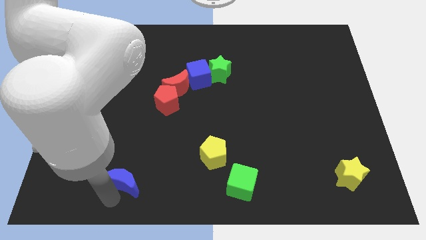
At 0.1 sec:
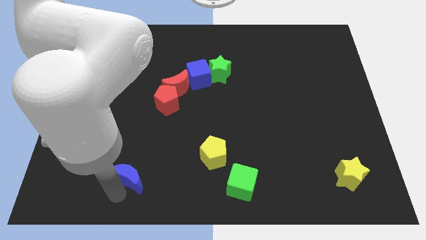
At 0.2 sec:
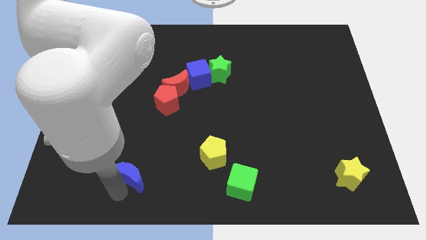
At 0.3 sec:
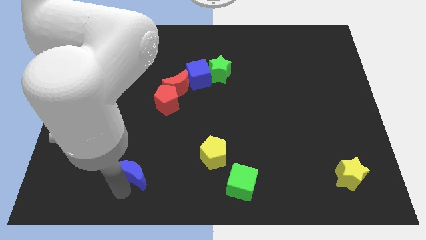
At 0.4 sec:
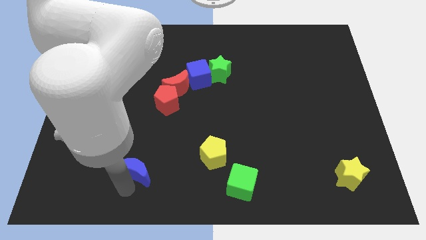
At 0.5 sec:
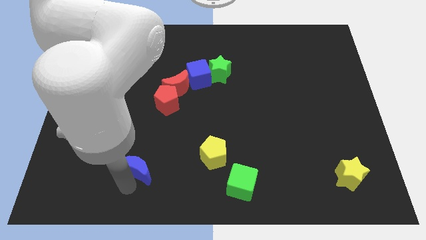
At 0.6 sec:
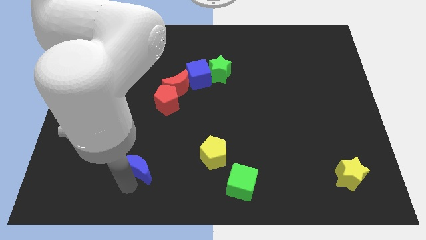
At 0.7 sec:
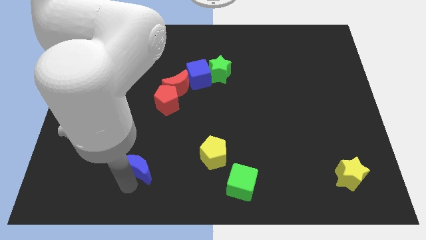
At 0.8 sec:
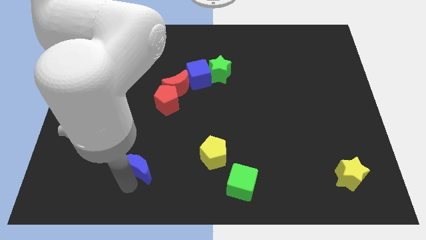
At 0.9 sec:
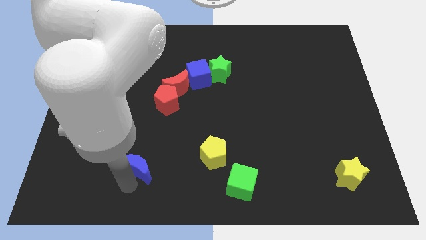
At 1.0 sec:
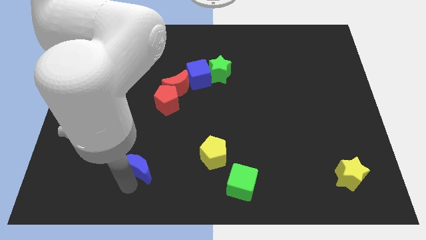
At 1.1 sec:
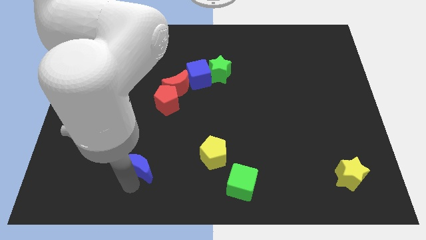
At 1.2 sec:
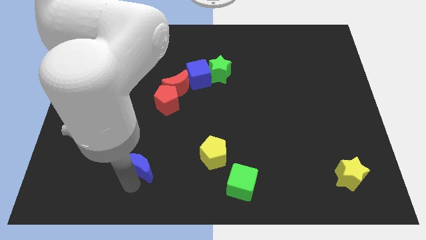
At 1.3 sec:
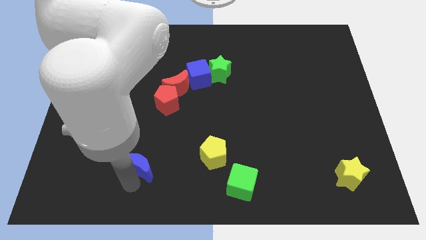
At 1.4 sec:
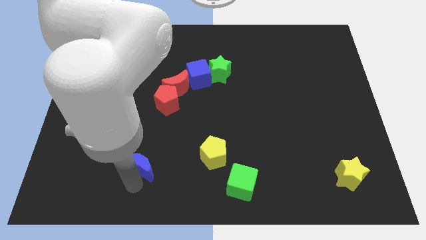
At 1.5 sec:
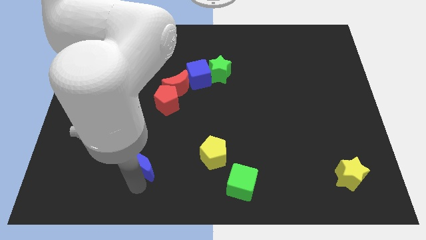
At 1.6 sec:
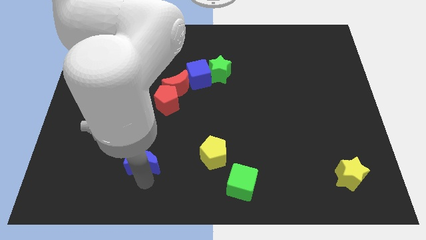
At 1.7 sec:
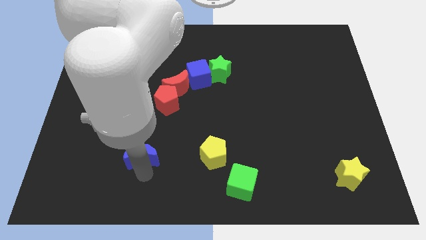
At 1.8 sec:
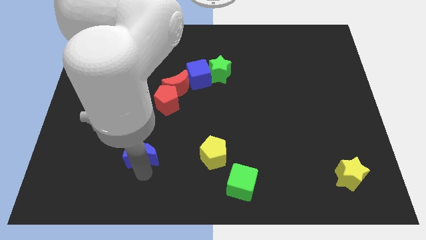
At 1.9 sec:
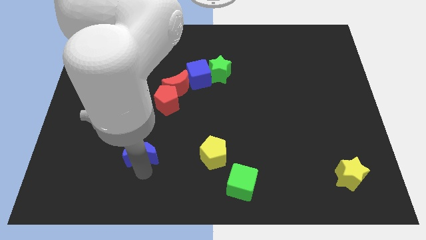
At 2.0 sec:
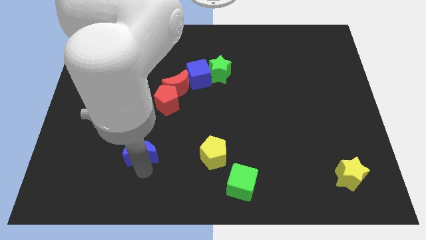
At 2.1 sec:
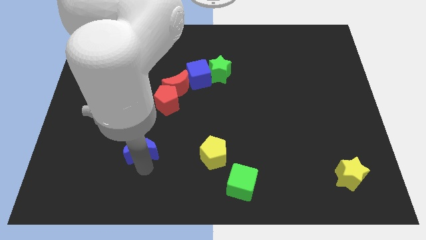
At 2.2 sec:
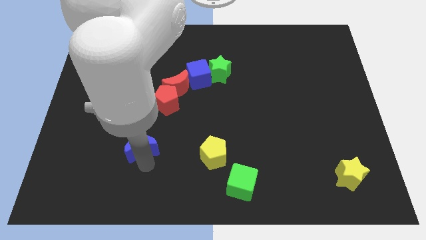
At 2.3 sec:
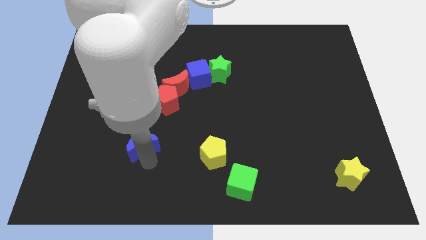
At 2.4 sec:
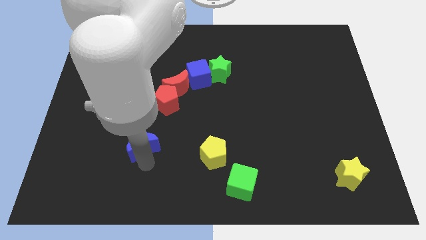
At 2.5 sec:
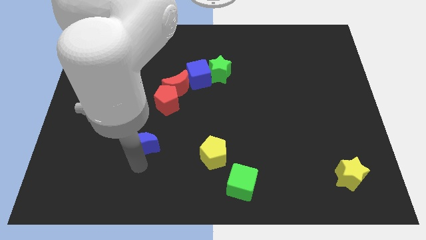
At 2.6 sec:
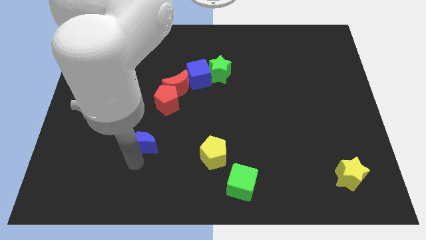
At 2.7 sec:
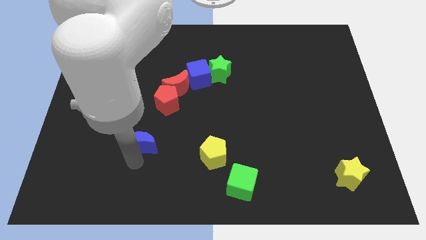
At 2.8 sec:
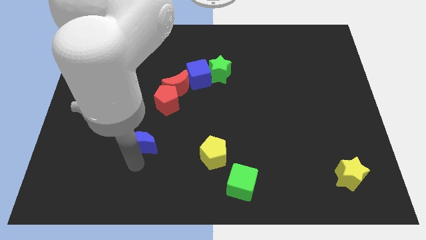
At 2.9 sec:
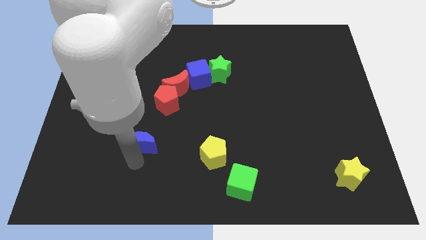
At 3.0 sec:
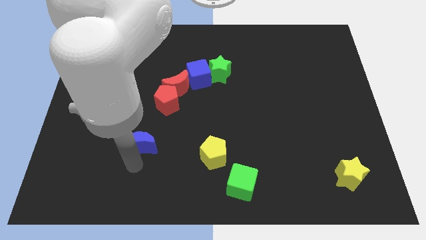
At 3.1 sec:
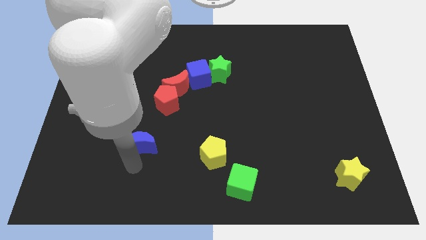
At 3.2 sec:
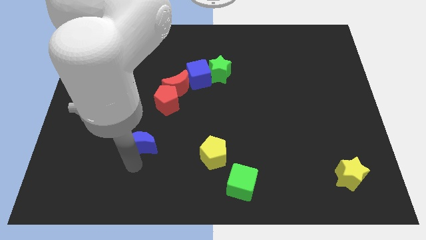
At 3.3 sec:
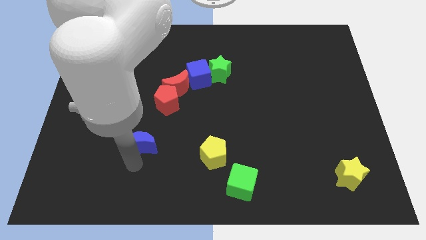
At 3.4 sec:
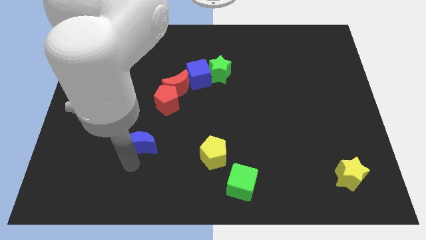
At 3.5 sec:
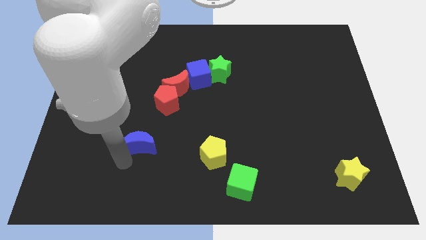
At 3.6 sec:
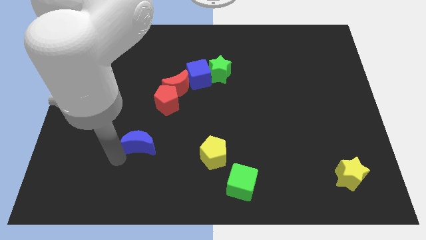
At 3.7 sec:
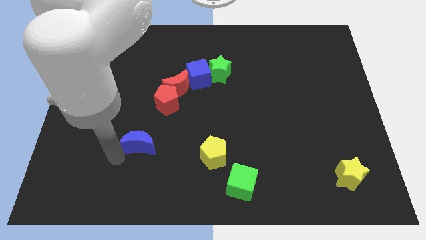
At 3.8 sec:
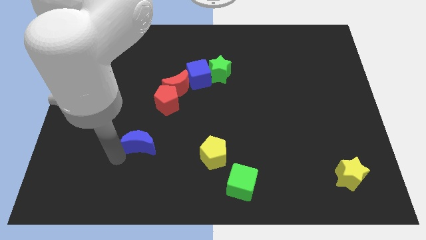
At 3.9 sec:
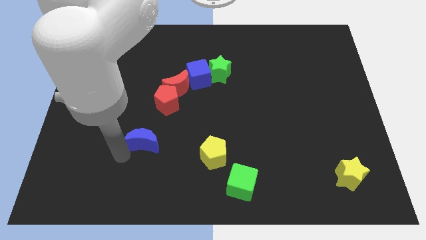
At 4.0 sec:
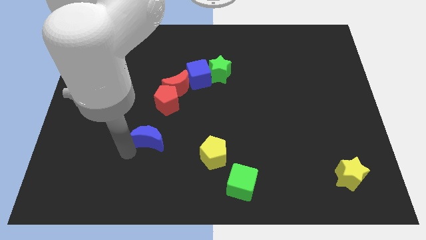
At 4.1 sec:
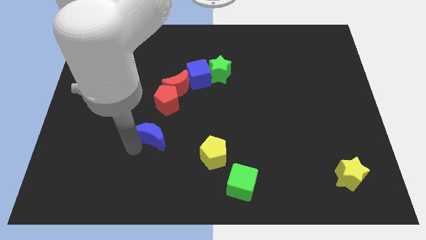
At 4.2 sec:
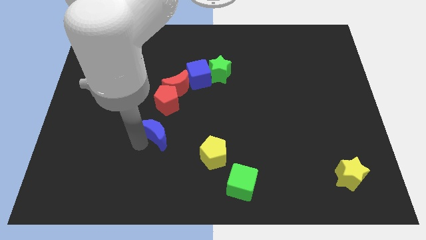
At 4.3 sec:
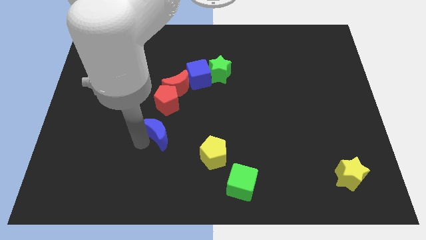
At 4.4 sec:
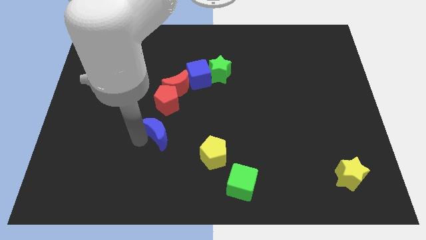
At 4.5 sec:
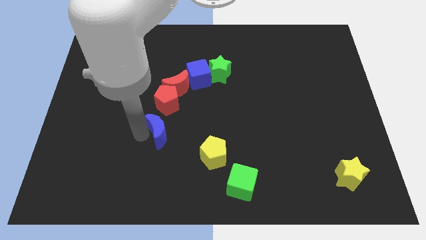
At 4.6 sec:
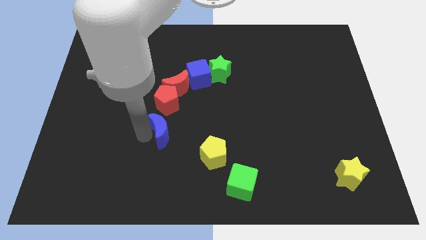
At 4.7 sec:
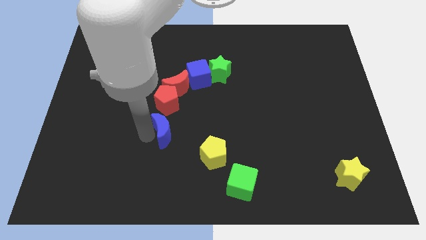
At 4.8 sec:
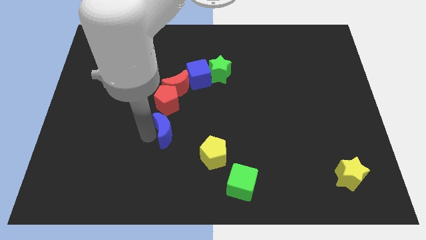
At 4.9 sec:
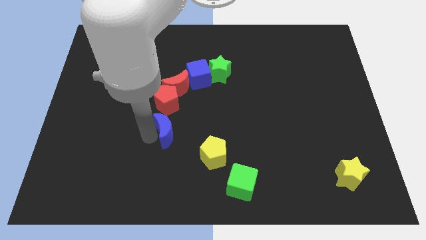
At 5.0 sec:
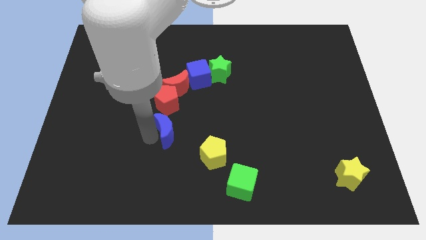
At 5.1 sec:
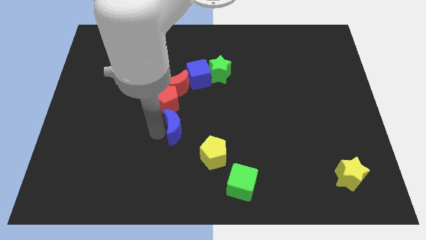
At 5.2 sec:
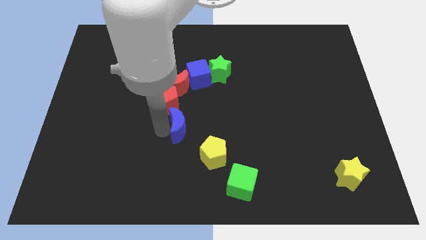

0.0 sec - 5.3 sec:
move the blue crescent towards the bottom of red pentagon

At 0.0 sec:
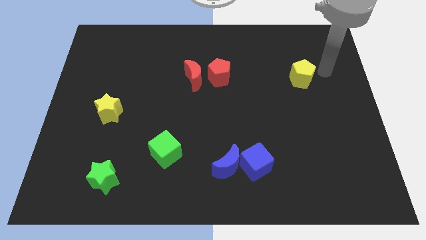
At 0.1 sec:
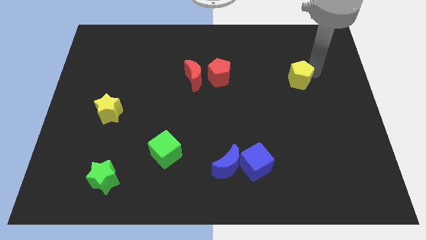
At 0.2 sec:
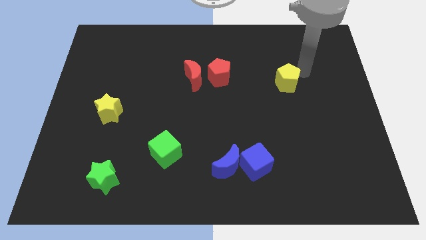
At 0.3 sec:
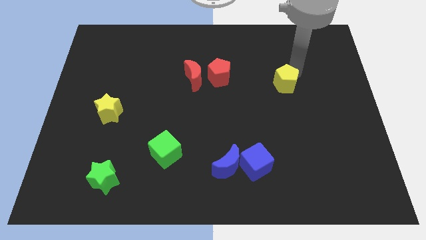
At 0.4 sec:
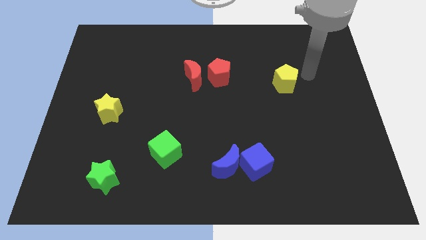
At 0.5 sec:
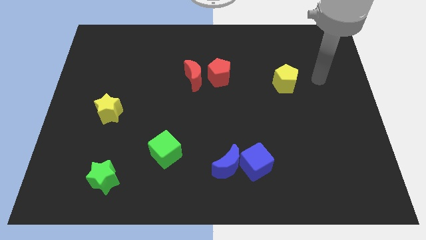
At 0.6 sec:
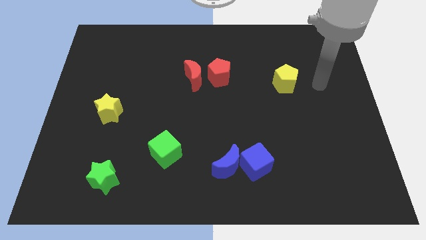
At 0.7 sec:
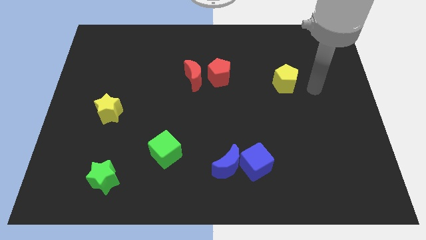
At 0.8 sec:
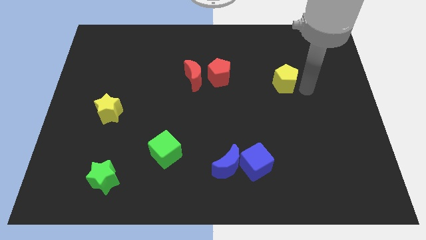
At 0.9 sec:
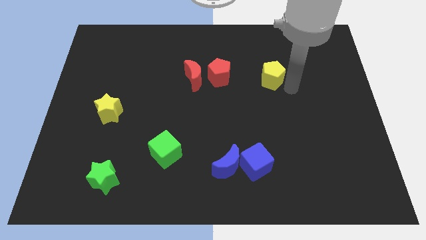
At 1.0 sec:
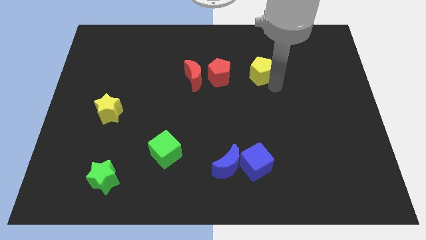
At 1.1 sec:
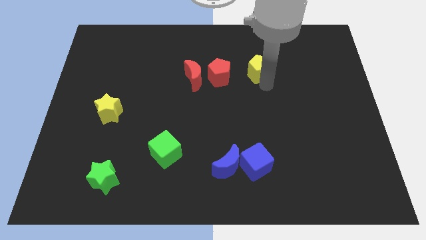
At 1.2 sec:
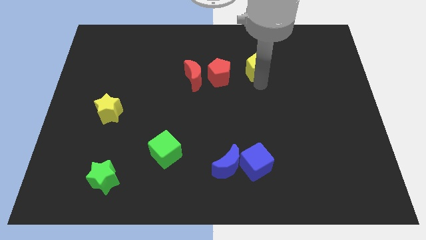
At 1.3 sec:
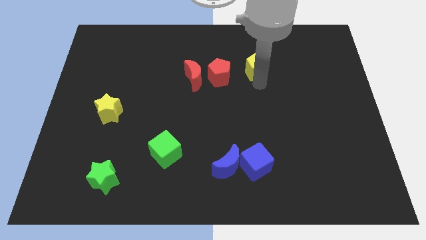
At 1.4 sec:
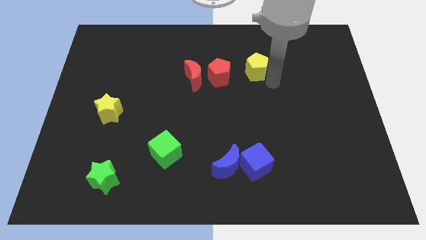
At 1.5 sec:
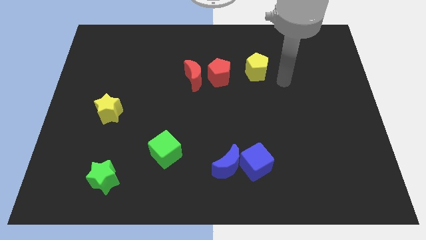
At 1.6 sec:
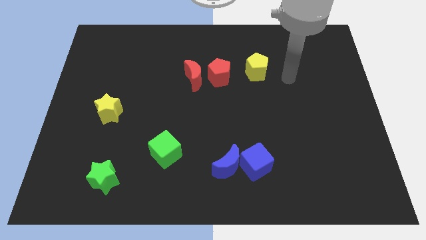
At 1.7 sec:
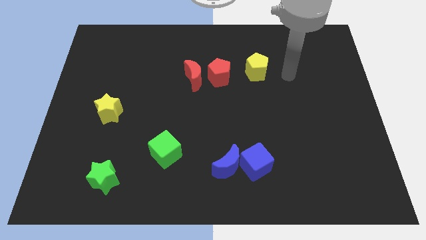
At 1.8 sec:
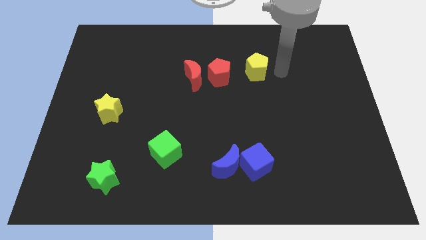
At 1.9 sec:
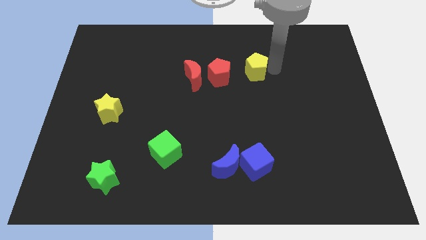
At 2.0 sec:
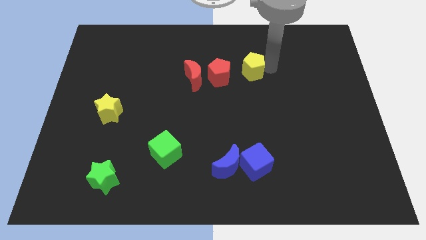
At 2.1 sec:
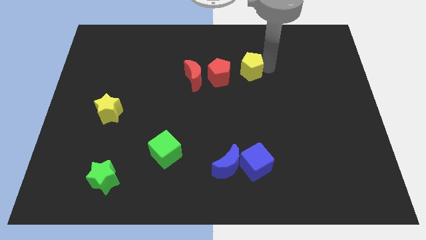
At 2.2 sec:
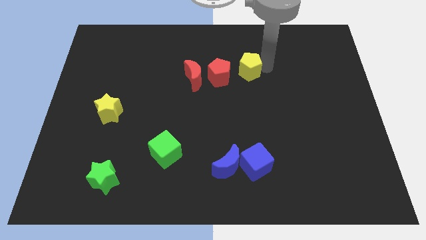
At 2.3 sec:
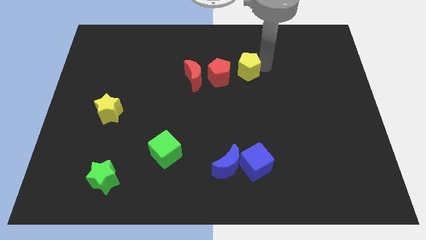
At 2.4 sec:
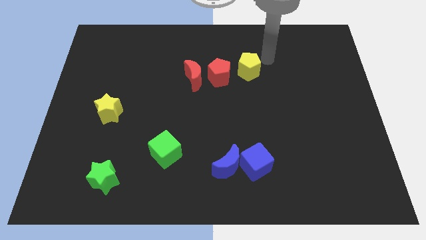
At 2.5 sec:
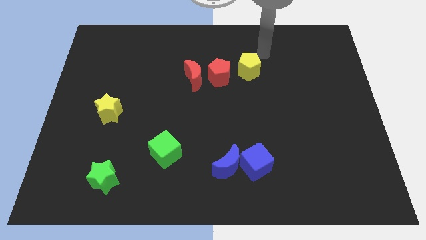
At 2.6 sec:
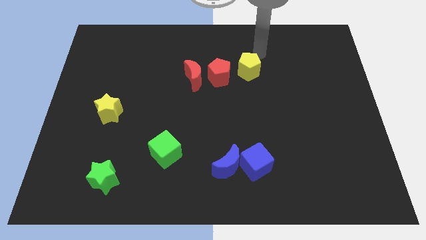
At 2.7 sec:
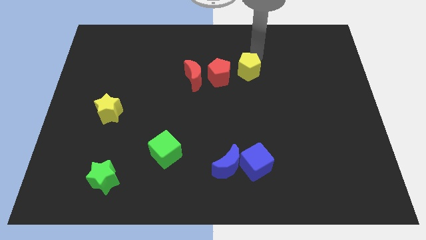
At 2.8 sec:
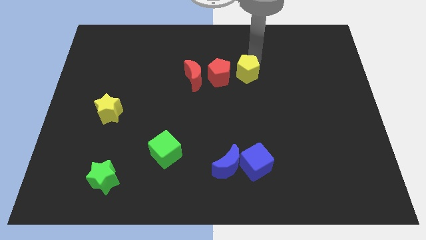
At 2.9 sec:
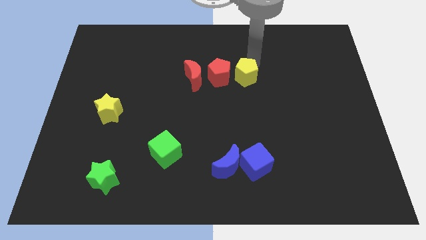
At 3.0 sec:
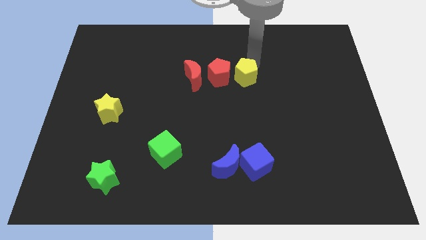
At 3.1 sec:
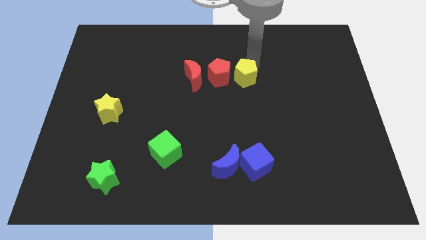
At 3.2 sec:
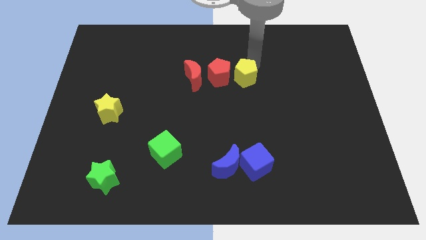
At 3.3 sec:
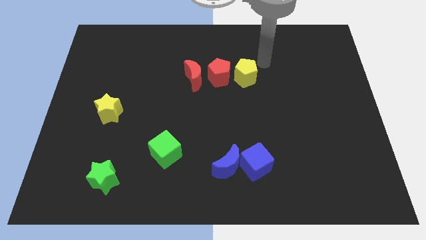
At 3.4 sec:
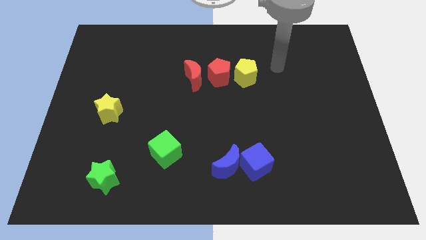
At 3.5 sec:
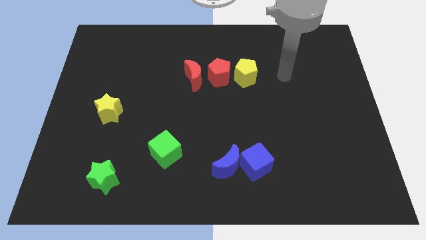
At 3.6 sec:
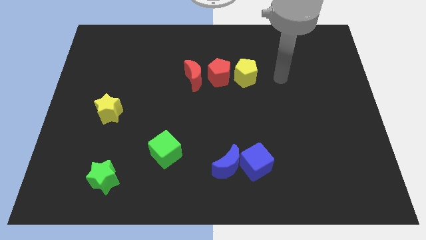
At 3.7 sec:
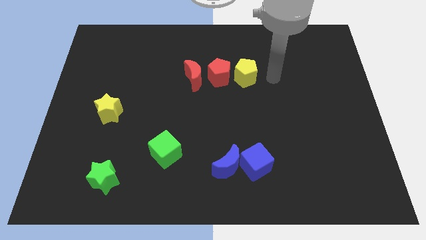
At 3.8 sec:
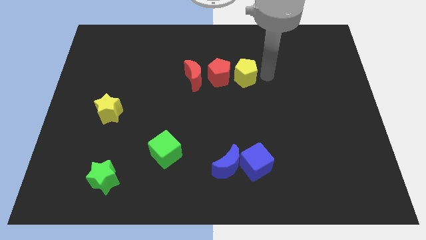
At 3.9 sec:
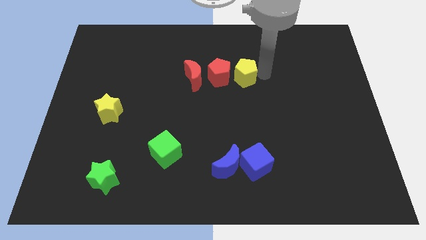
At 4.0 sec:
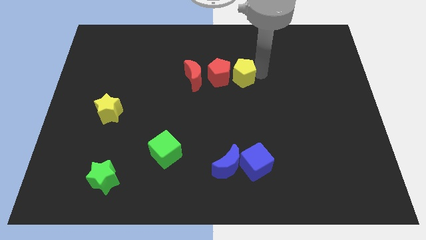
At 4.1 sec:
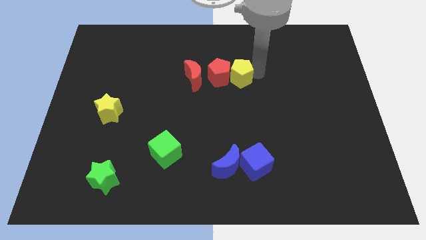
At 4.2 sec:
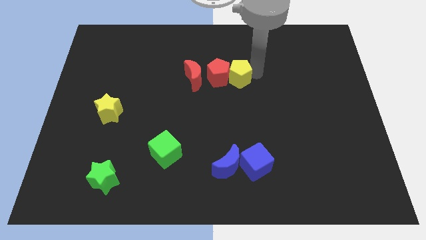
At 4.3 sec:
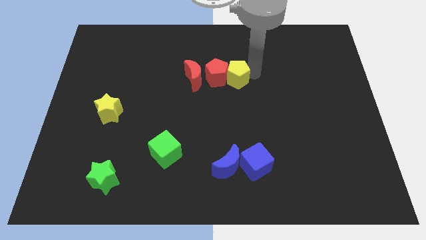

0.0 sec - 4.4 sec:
place yellow pentagon close to red pentagon
